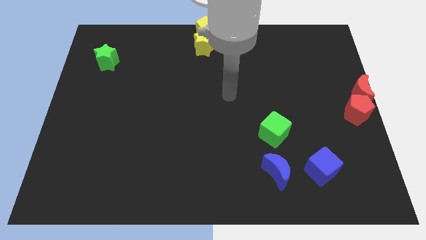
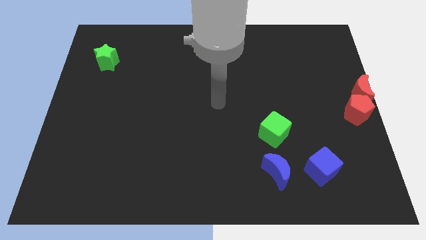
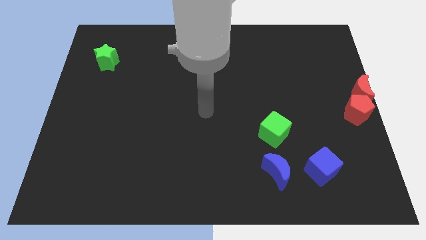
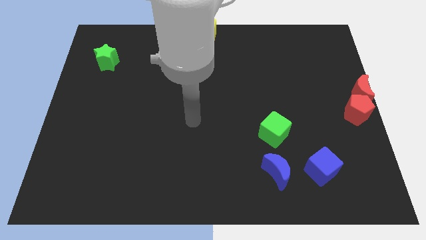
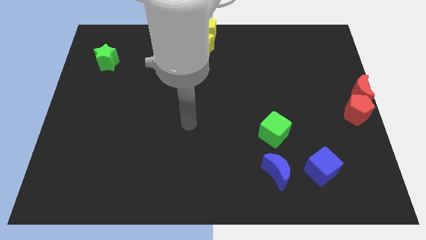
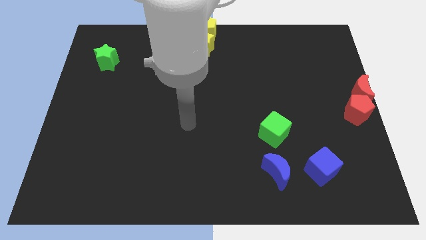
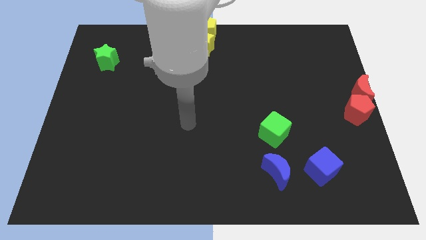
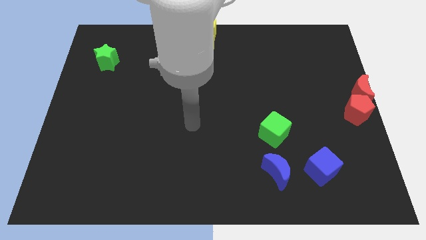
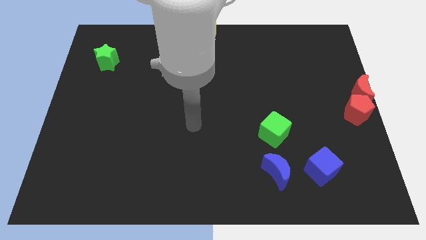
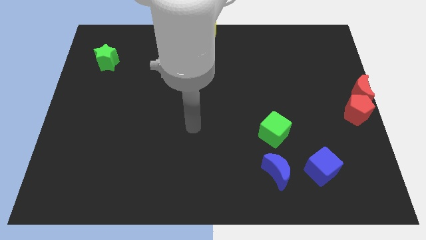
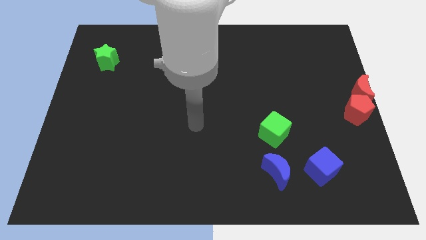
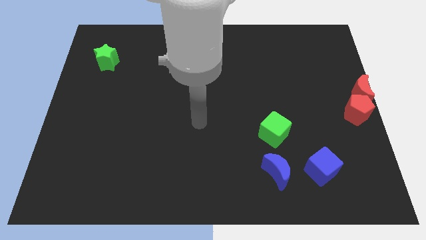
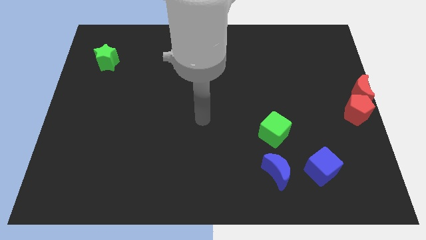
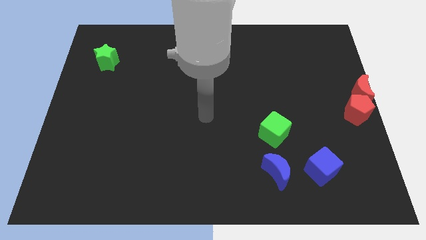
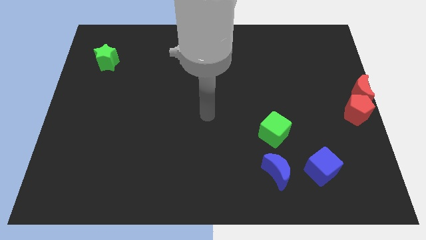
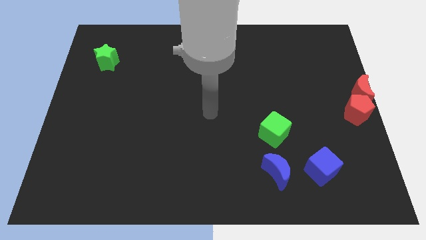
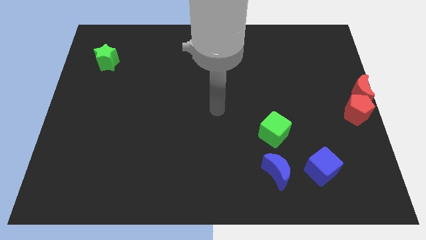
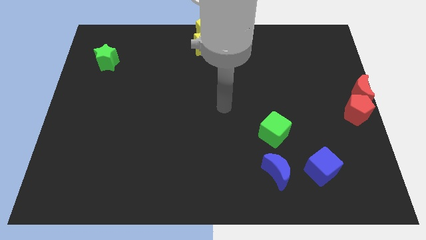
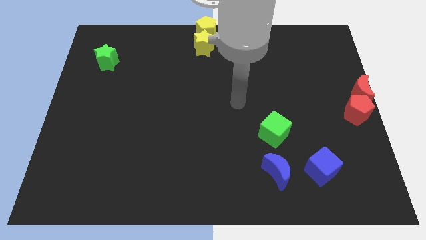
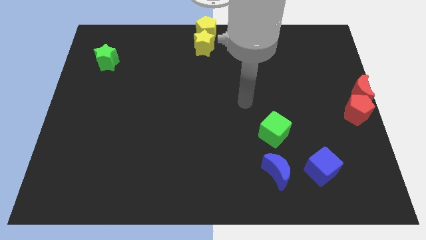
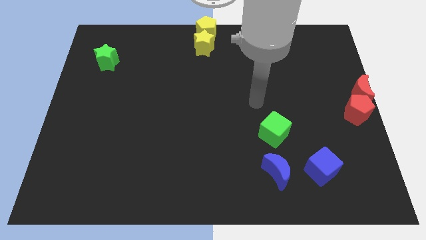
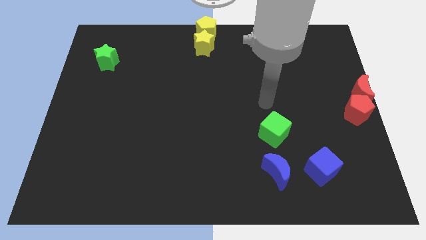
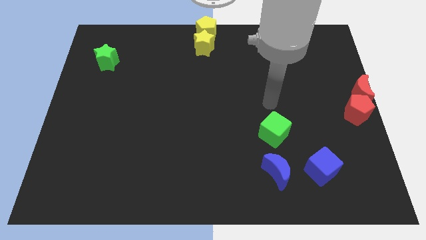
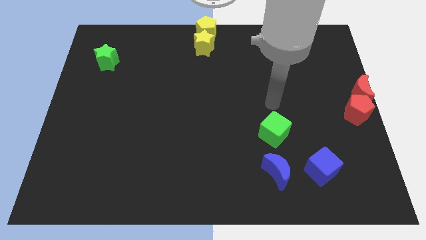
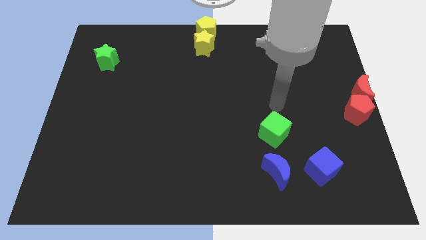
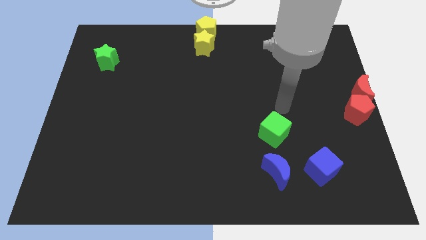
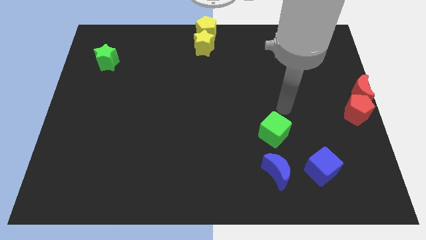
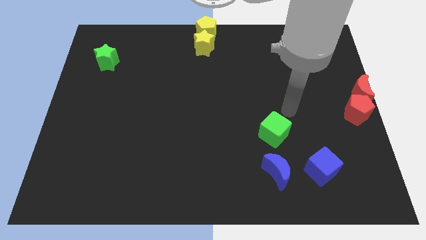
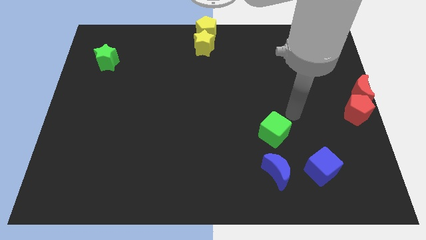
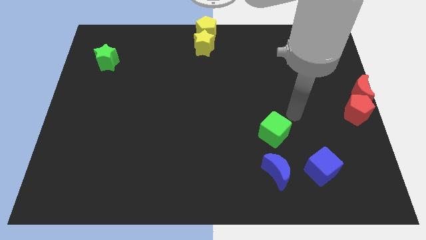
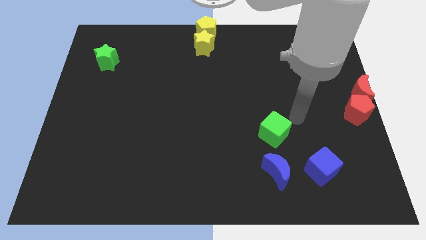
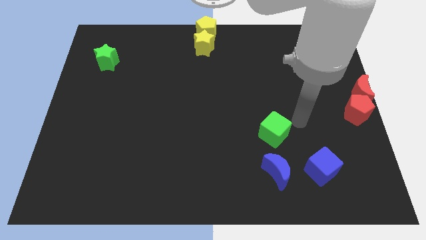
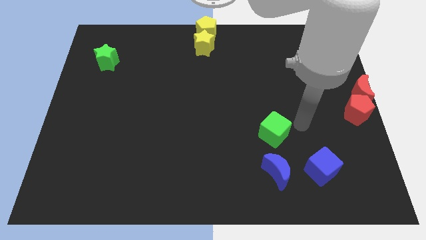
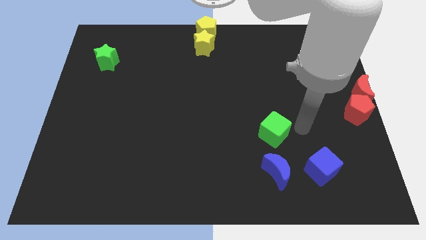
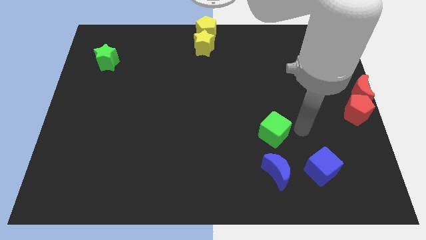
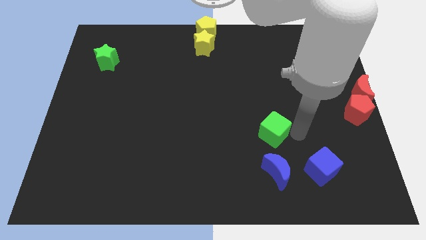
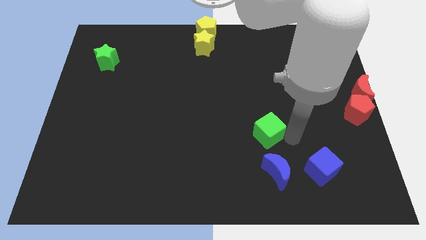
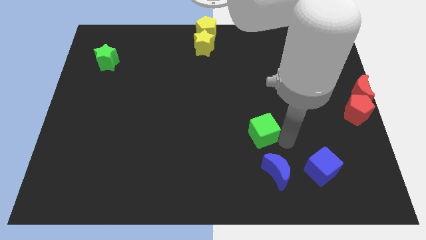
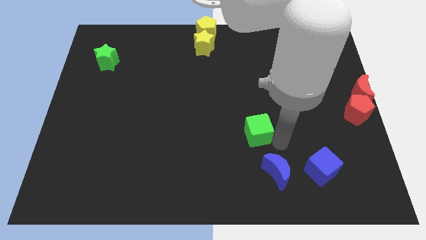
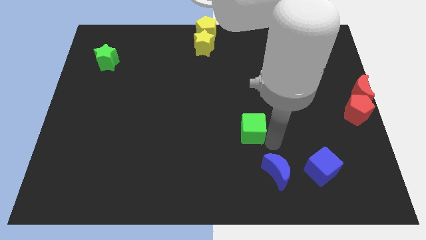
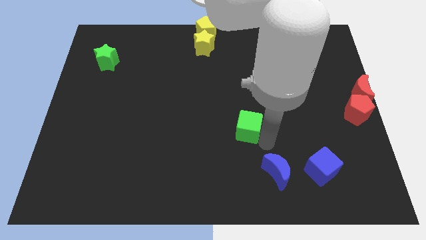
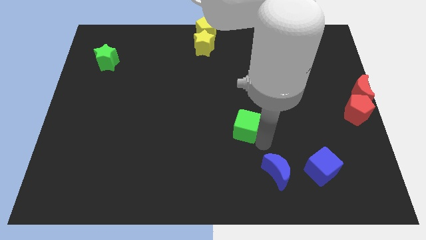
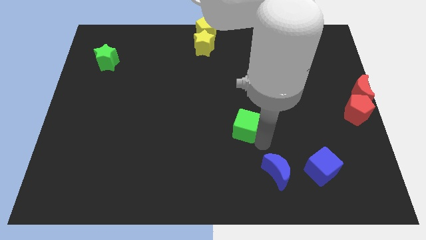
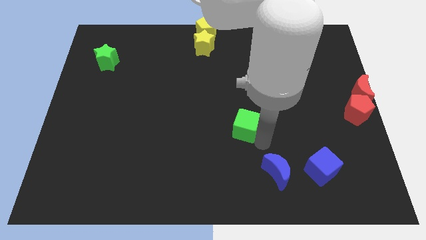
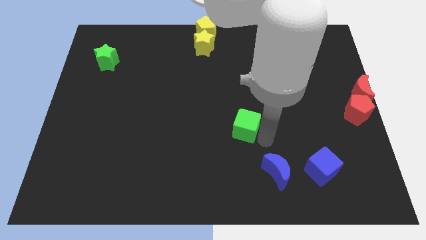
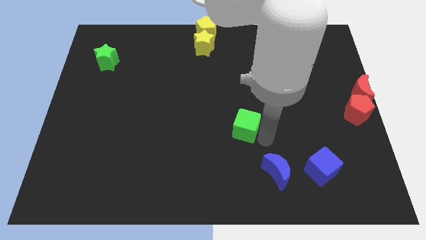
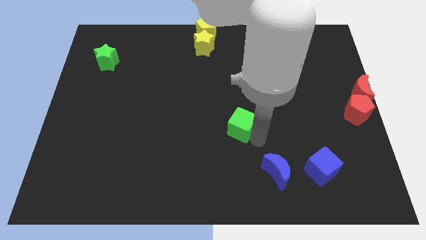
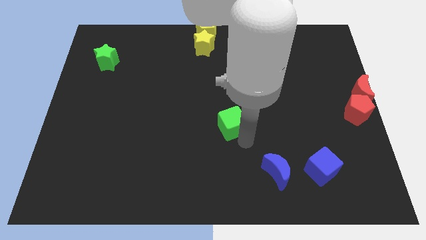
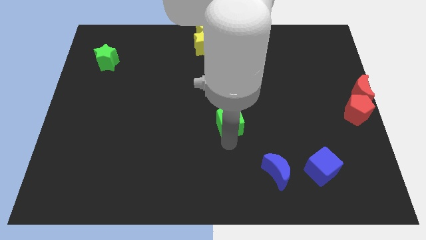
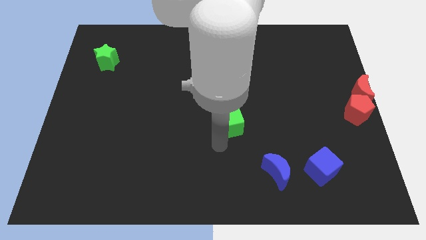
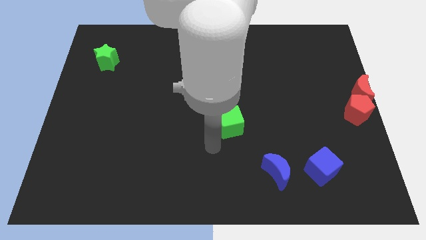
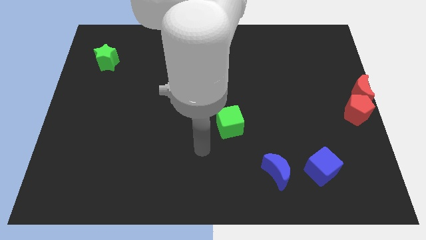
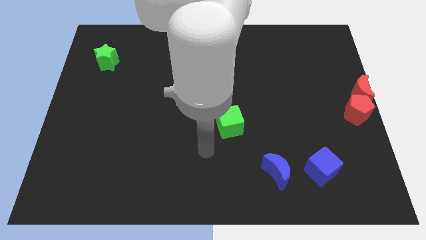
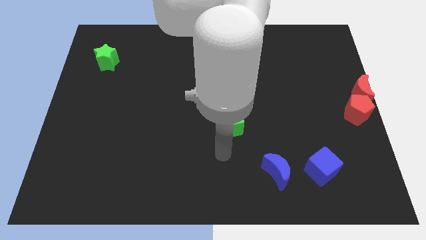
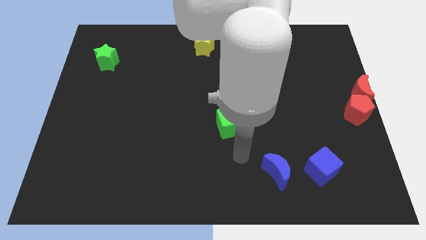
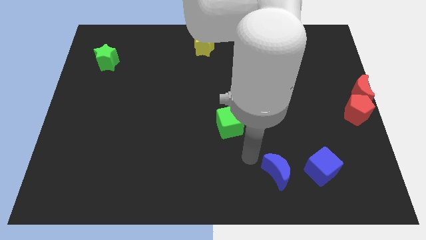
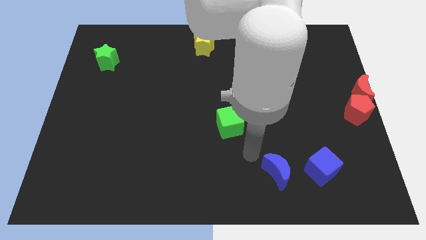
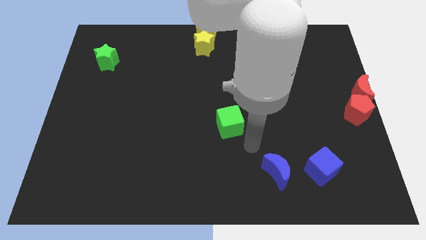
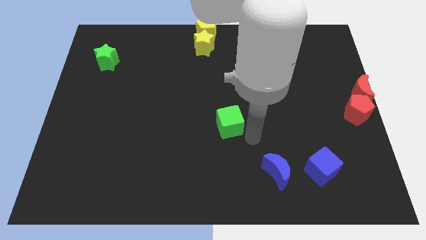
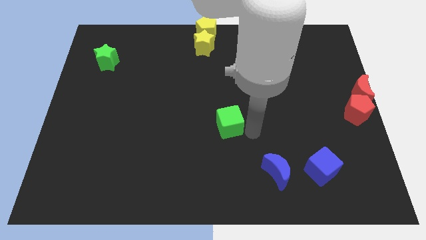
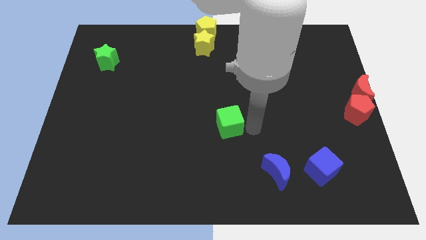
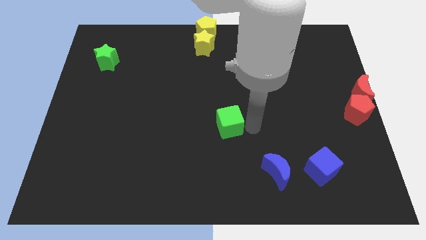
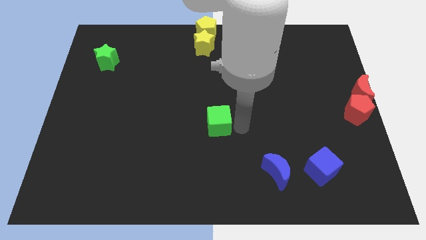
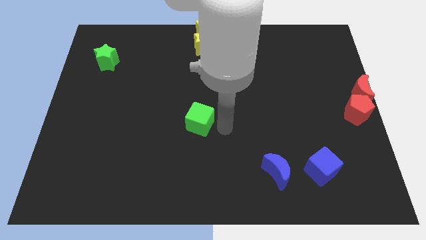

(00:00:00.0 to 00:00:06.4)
place the green cube at the center of the board

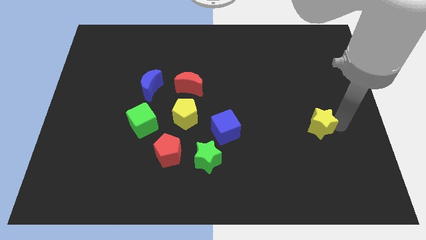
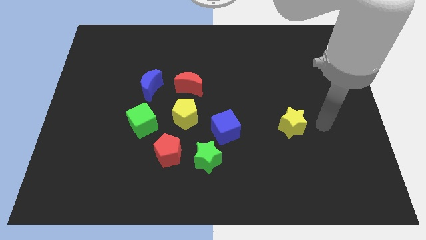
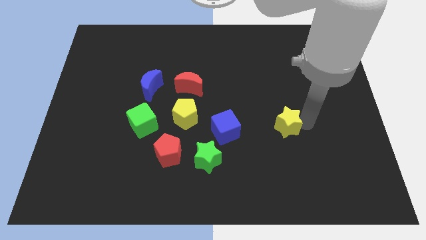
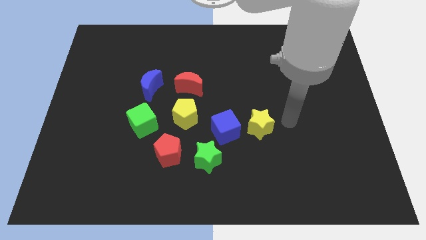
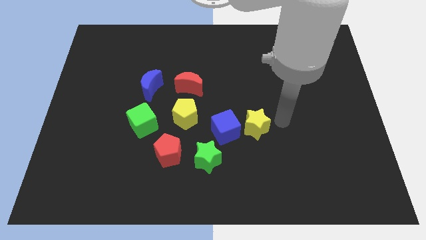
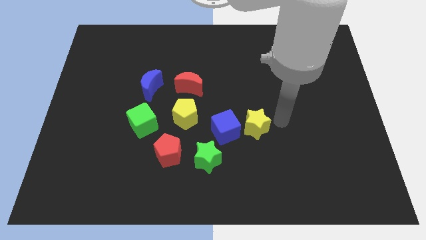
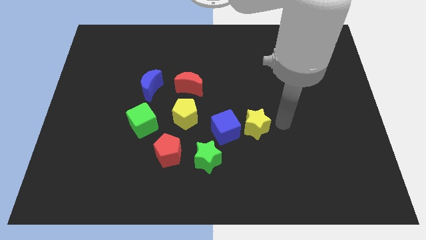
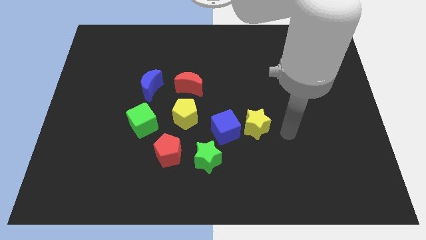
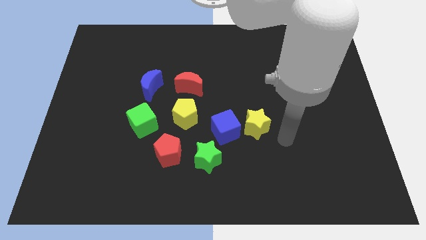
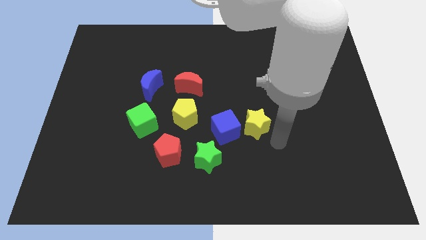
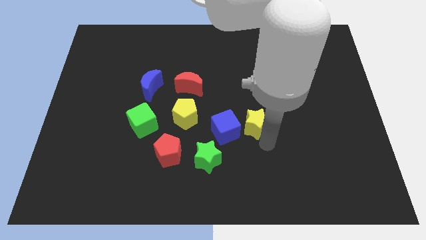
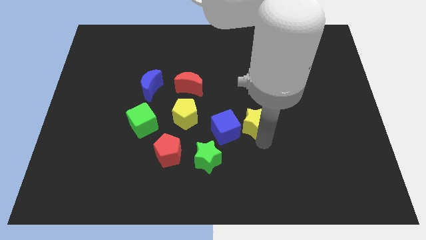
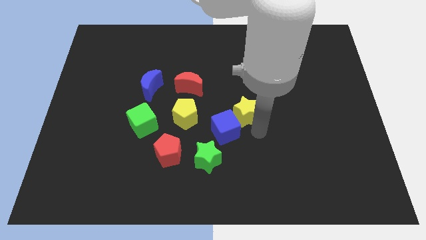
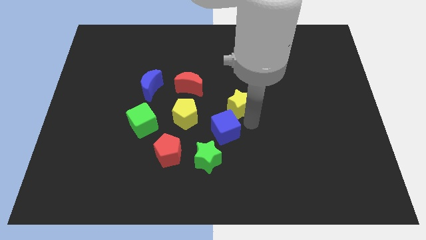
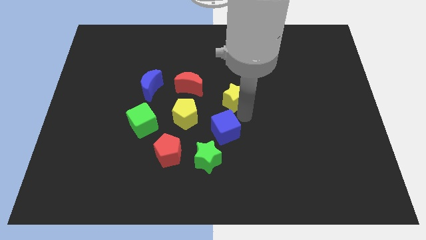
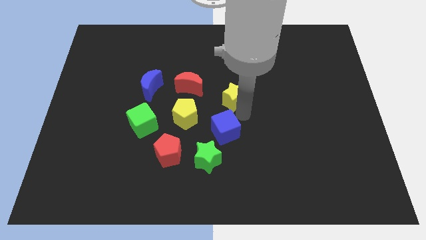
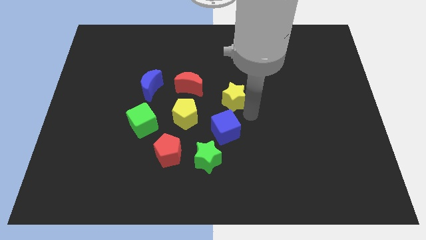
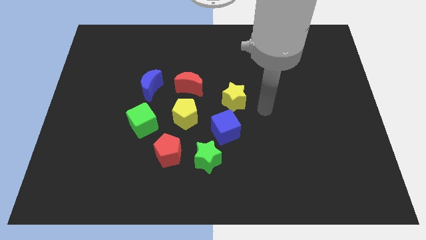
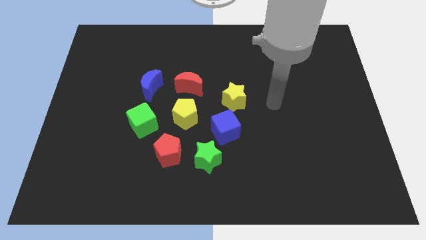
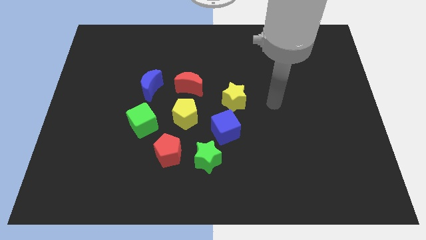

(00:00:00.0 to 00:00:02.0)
place the yellow star above the blue cube

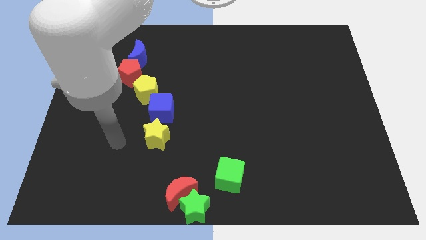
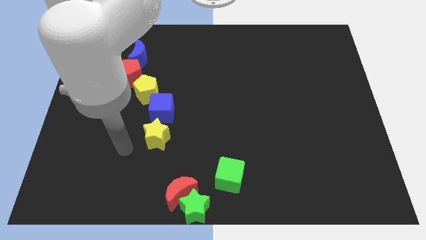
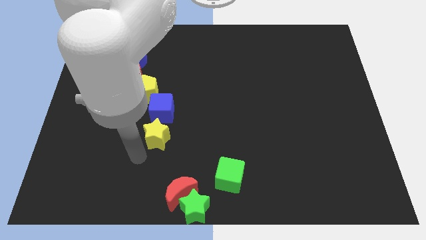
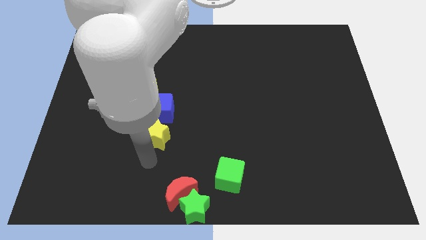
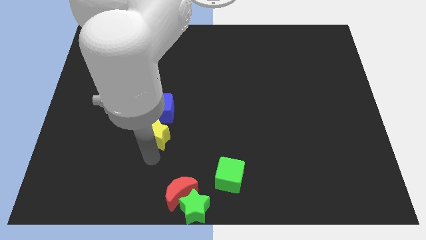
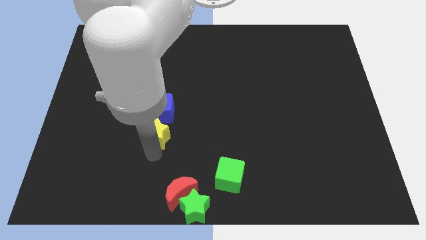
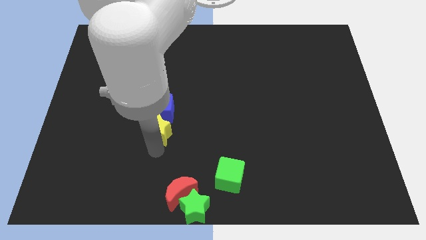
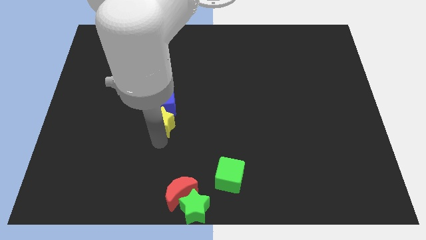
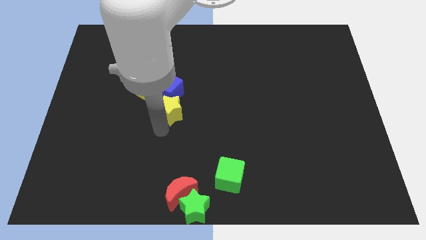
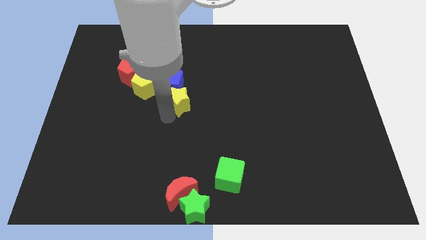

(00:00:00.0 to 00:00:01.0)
push the yellow star to the right of the blue cube
